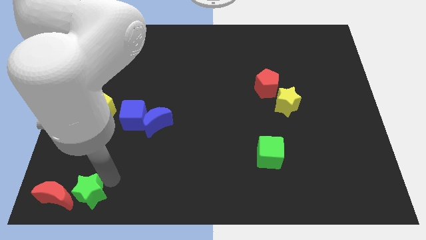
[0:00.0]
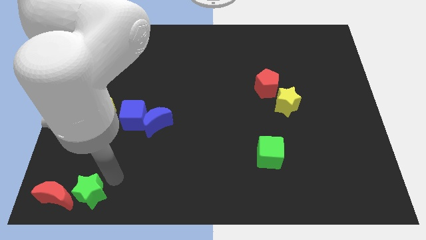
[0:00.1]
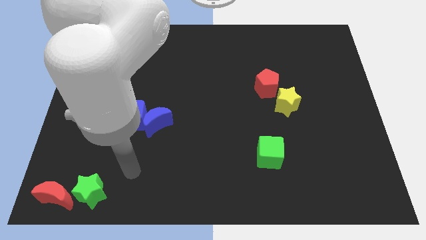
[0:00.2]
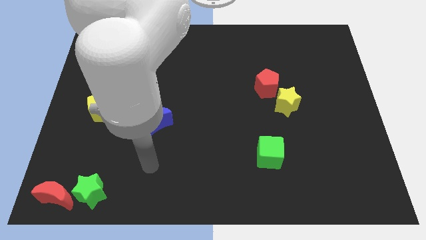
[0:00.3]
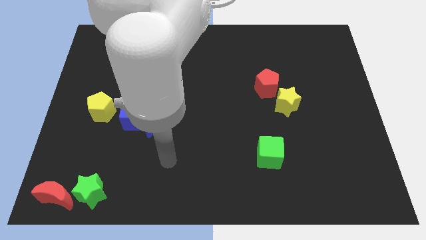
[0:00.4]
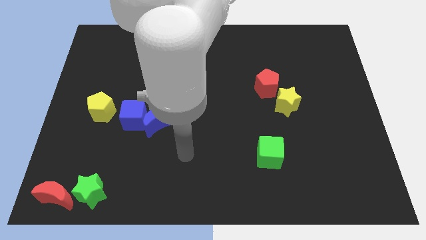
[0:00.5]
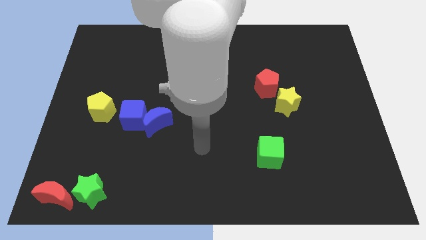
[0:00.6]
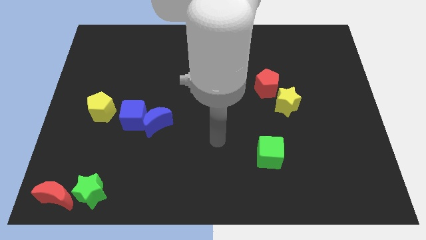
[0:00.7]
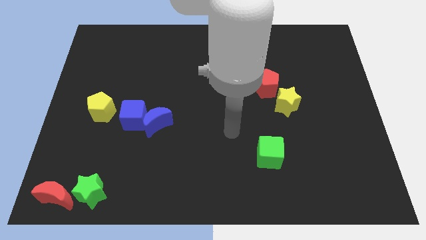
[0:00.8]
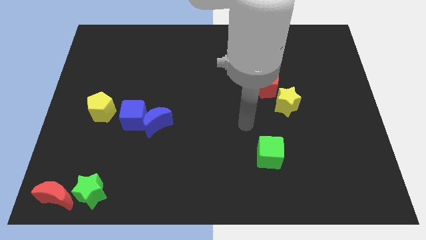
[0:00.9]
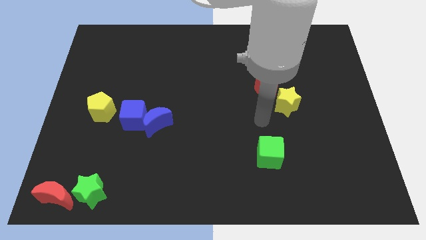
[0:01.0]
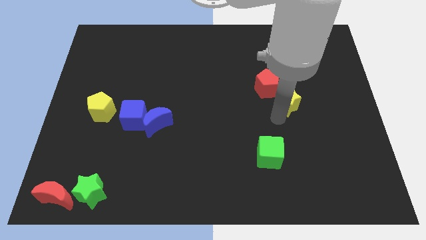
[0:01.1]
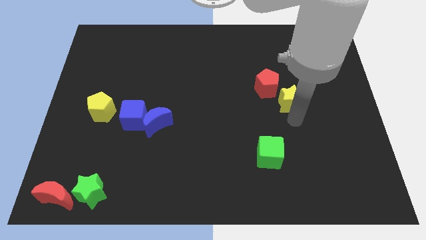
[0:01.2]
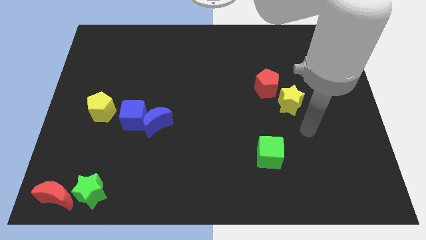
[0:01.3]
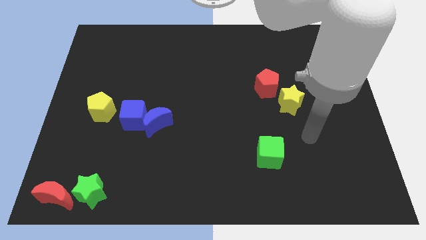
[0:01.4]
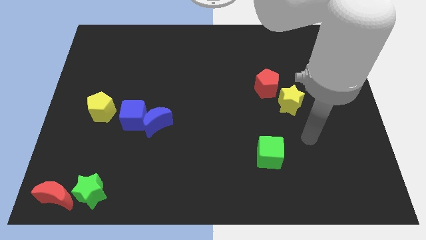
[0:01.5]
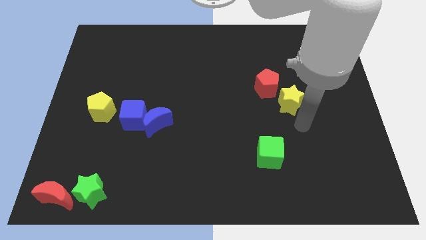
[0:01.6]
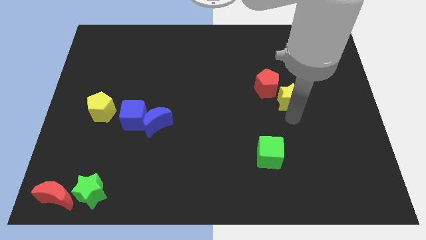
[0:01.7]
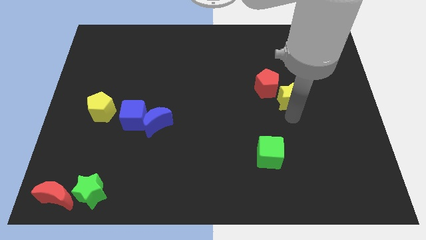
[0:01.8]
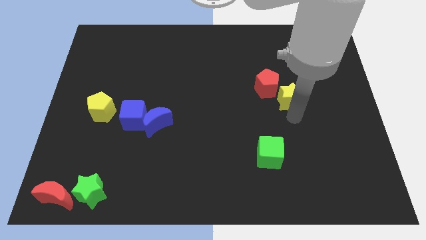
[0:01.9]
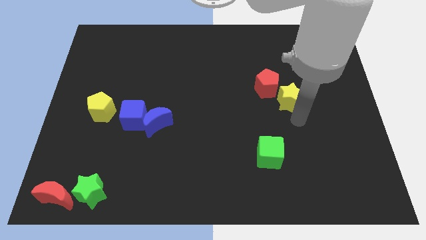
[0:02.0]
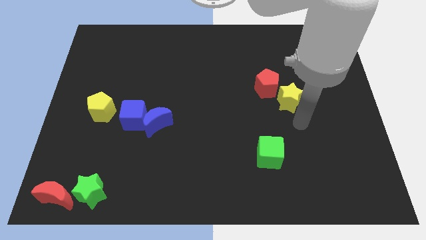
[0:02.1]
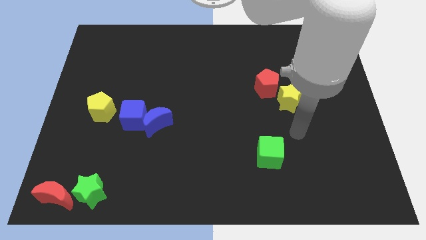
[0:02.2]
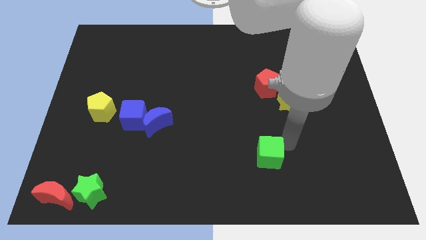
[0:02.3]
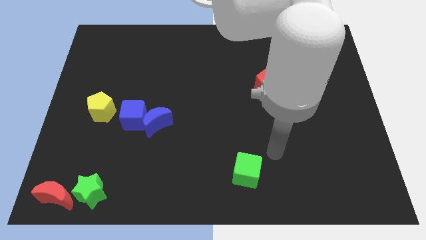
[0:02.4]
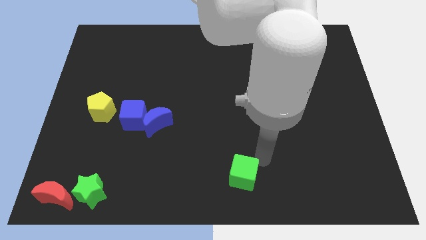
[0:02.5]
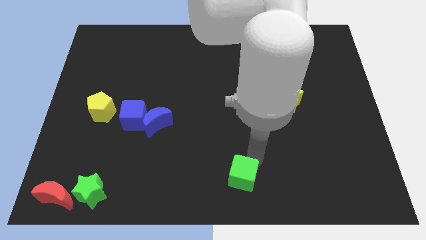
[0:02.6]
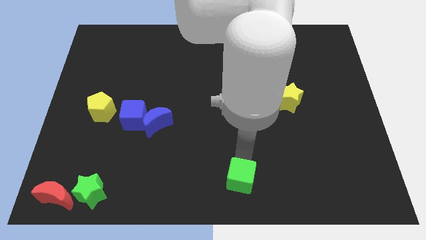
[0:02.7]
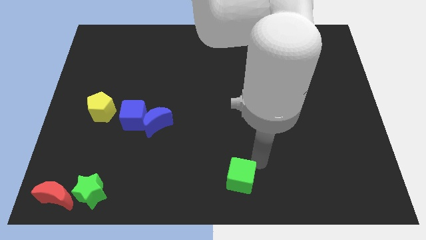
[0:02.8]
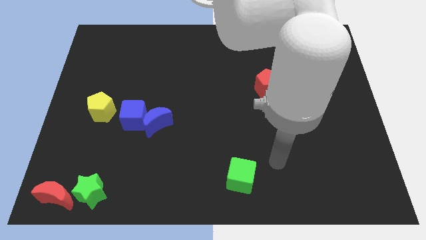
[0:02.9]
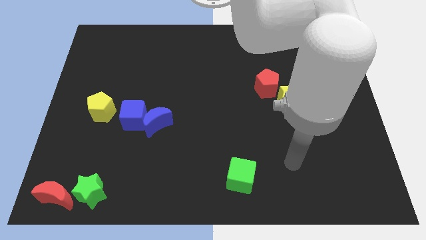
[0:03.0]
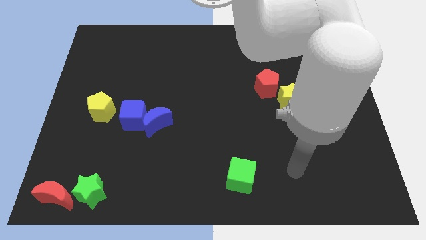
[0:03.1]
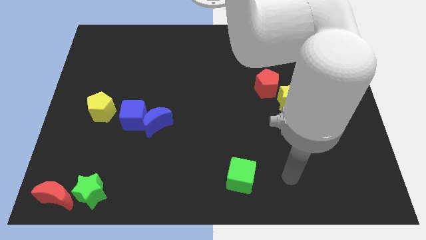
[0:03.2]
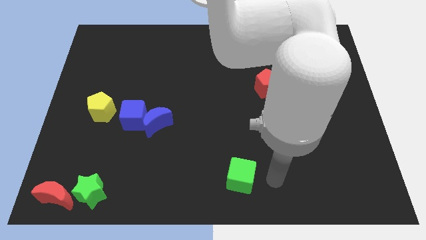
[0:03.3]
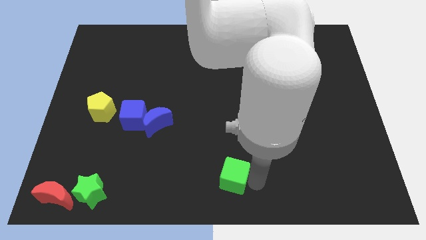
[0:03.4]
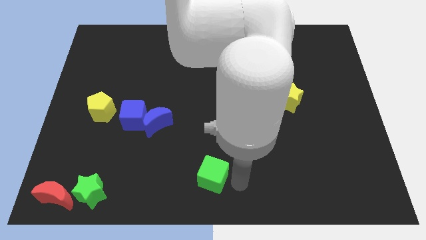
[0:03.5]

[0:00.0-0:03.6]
put the green cube at the bottom center of the board

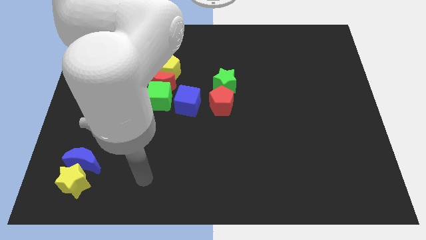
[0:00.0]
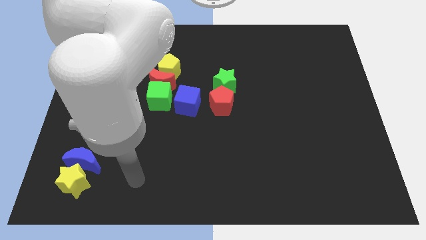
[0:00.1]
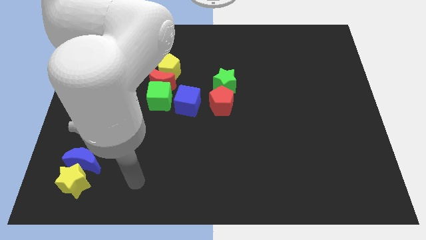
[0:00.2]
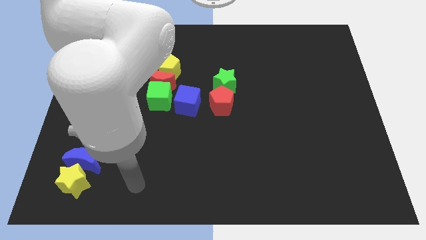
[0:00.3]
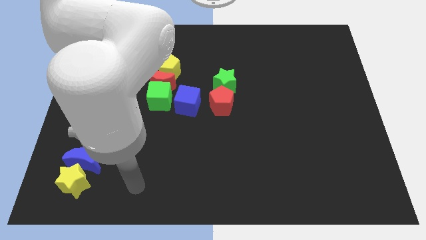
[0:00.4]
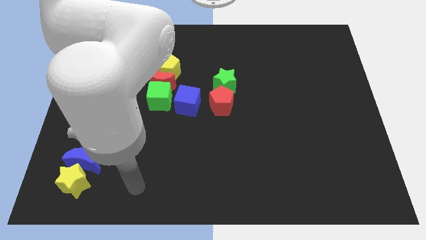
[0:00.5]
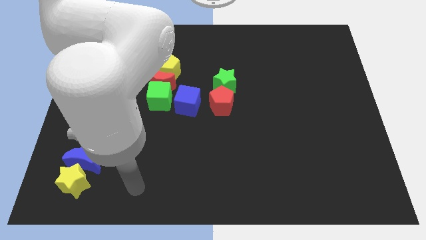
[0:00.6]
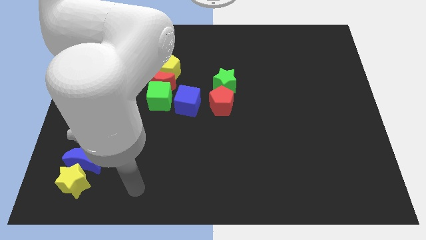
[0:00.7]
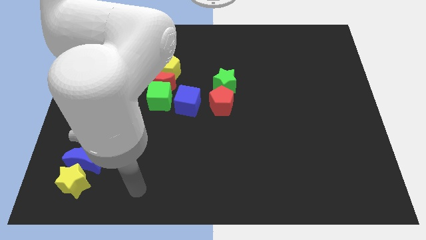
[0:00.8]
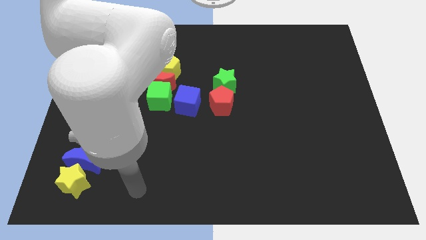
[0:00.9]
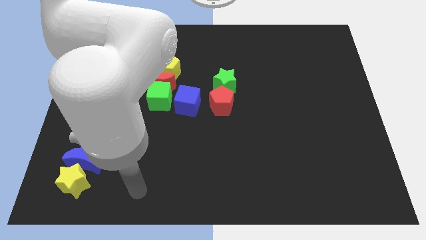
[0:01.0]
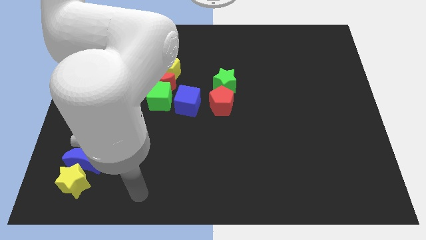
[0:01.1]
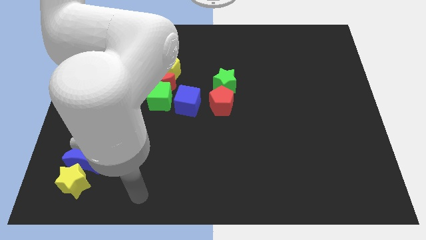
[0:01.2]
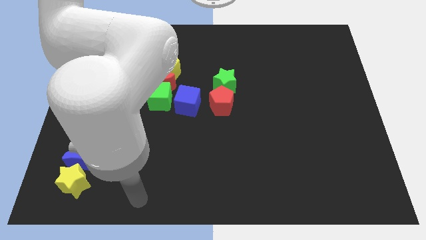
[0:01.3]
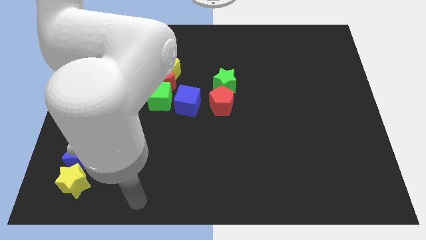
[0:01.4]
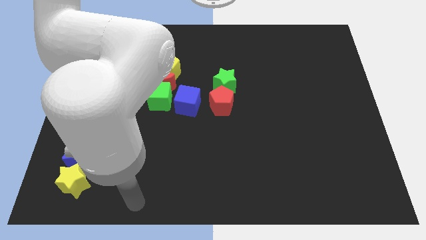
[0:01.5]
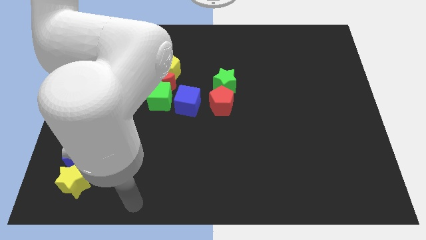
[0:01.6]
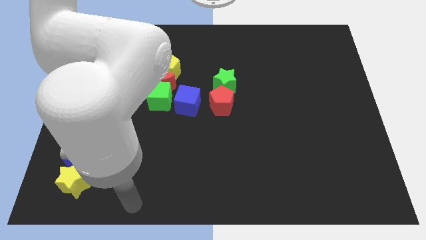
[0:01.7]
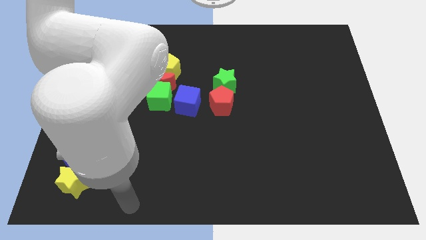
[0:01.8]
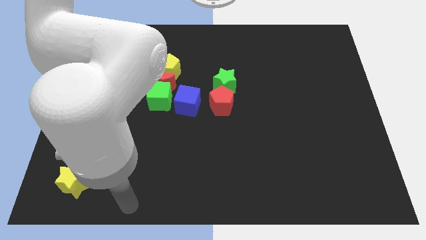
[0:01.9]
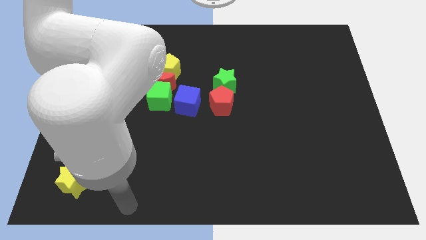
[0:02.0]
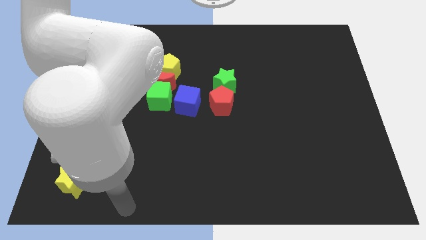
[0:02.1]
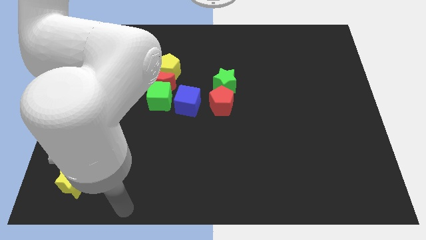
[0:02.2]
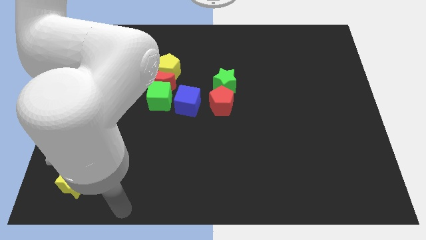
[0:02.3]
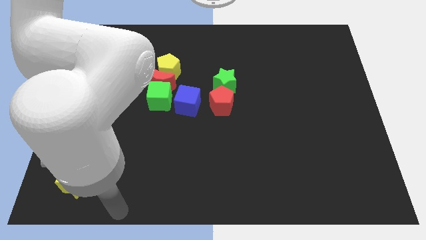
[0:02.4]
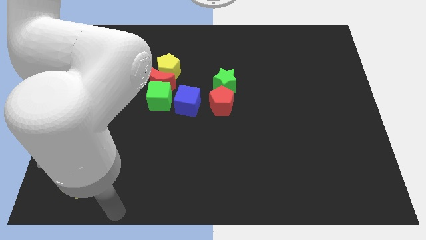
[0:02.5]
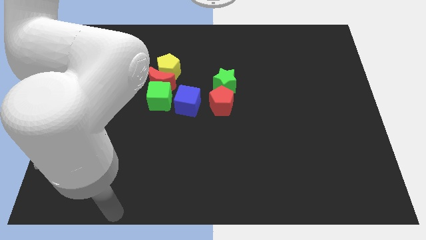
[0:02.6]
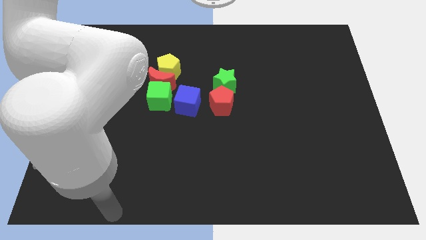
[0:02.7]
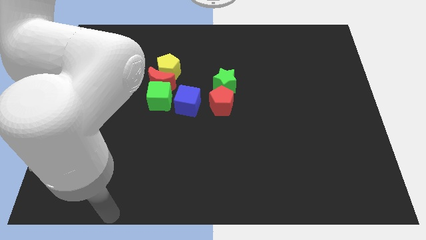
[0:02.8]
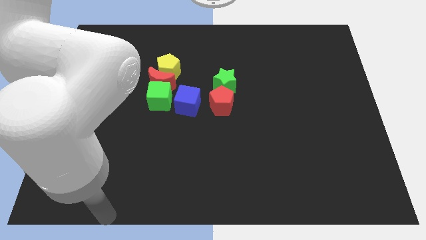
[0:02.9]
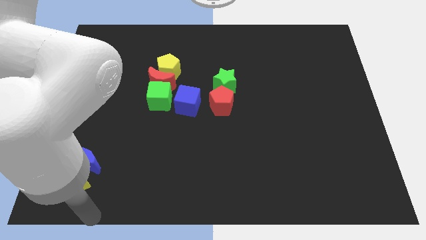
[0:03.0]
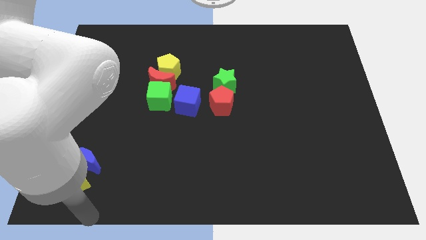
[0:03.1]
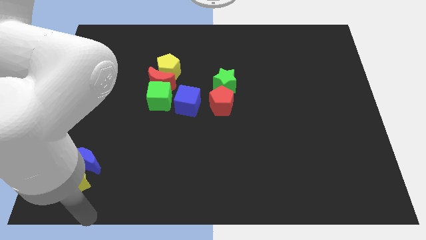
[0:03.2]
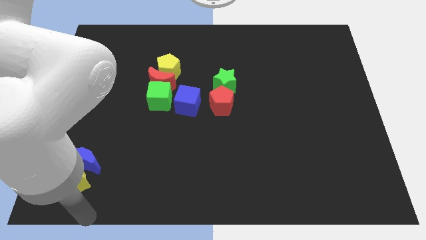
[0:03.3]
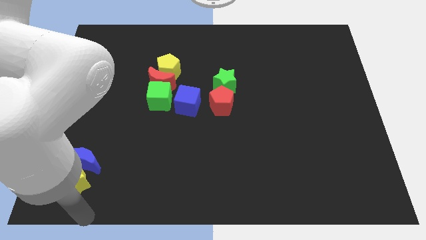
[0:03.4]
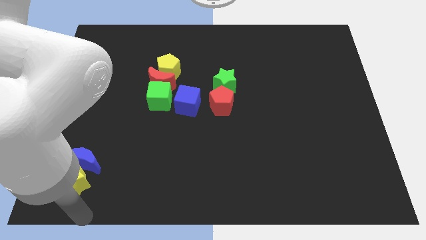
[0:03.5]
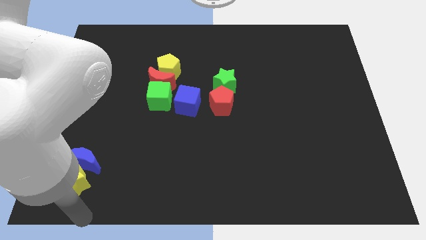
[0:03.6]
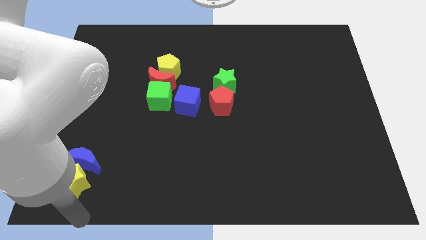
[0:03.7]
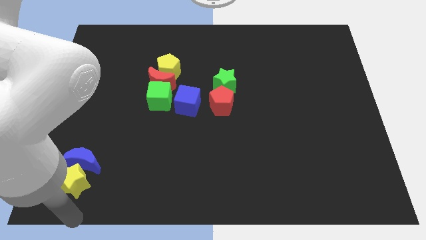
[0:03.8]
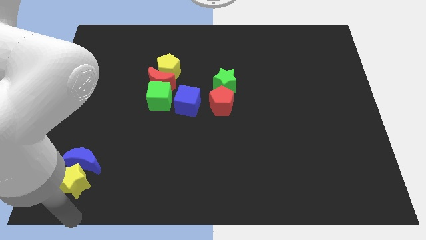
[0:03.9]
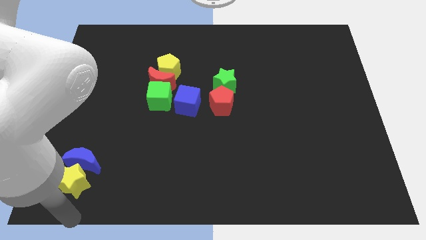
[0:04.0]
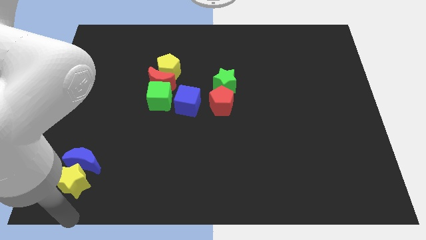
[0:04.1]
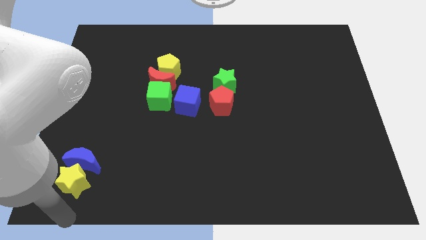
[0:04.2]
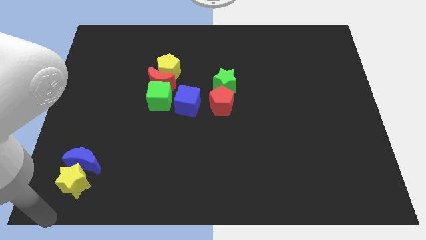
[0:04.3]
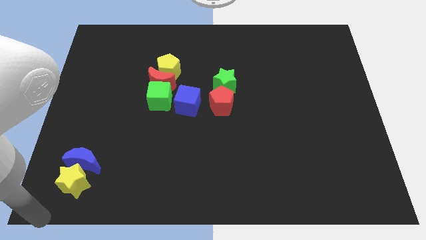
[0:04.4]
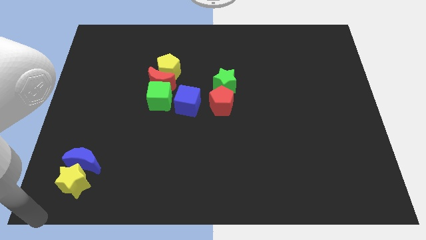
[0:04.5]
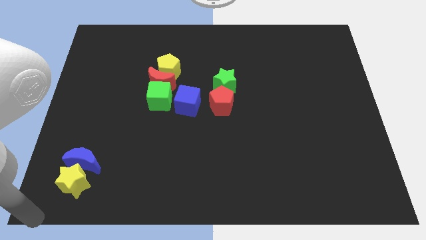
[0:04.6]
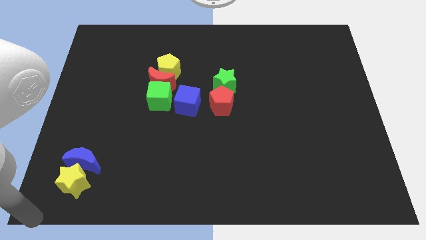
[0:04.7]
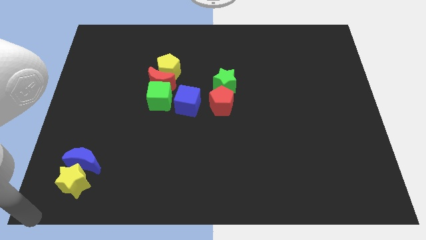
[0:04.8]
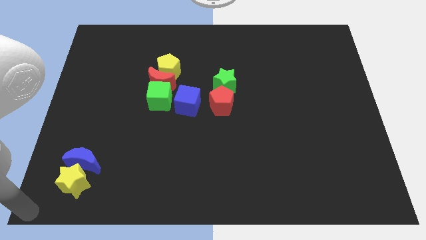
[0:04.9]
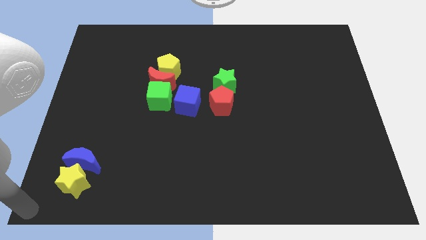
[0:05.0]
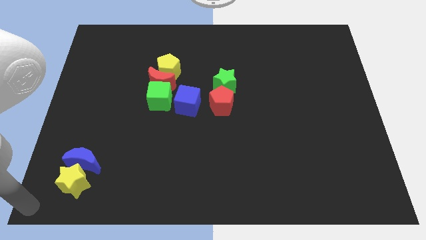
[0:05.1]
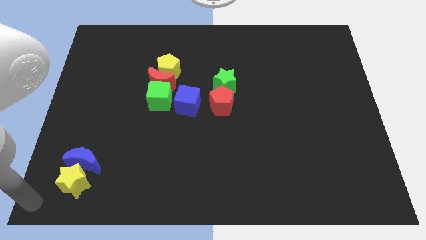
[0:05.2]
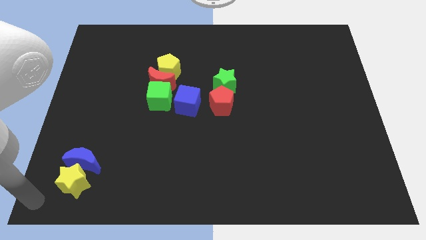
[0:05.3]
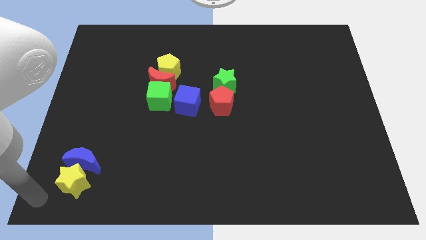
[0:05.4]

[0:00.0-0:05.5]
move your hand to the bottom left corner
